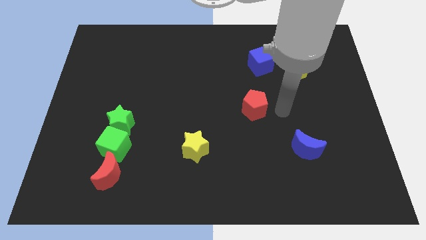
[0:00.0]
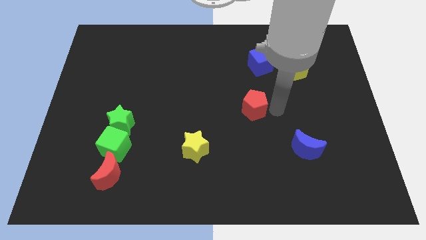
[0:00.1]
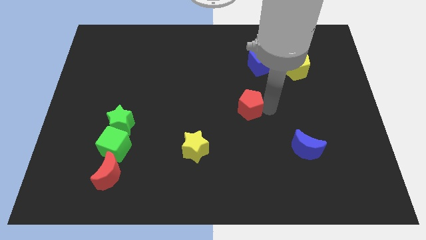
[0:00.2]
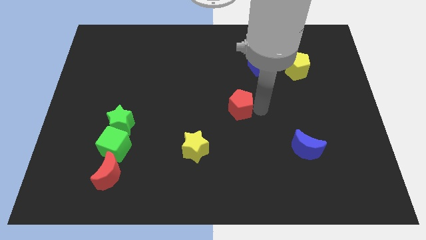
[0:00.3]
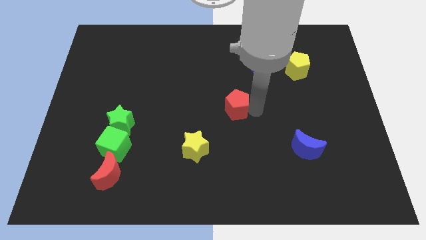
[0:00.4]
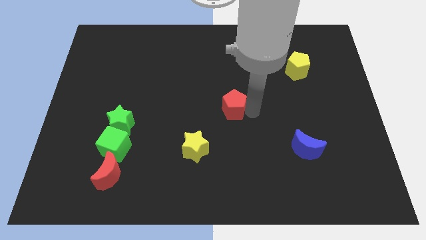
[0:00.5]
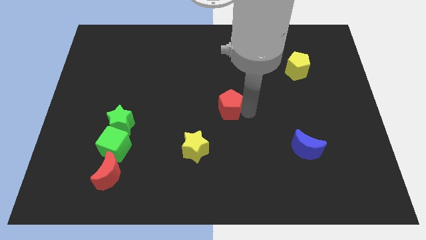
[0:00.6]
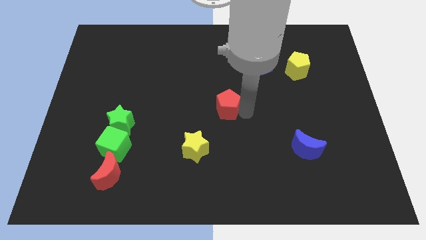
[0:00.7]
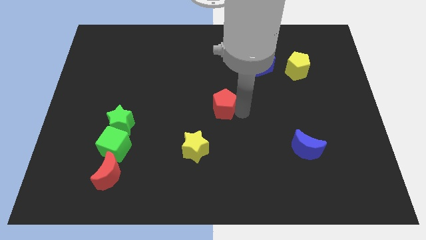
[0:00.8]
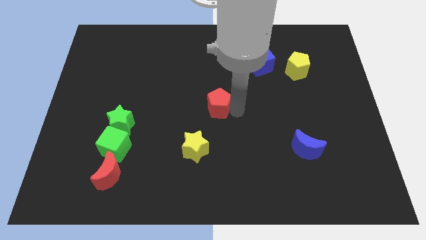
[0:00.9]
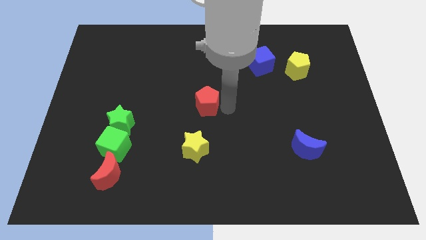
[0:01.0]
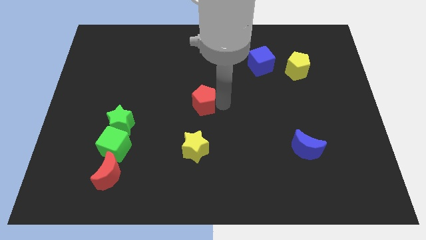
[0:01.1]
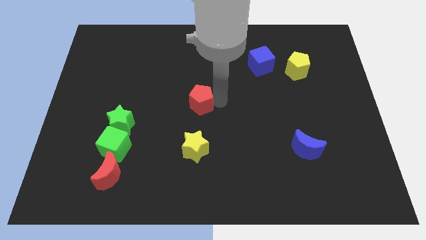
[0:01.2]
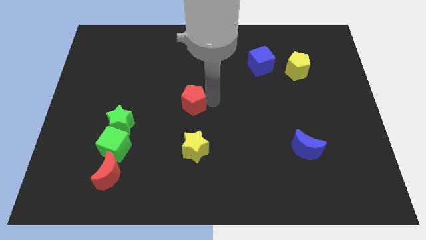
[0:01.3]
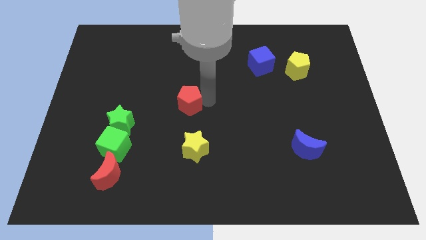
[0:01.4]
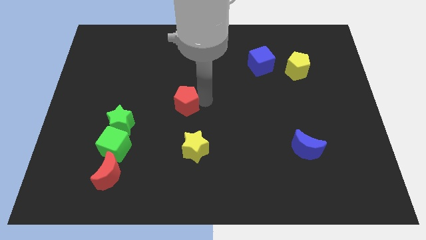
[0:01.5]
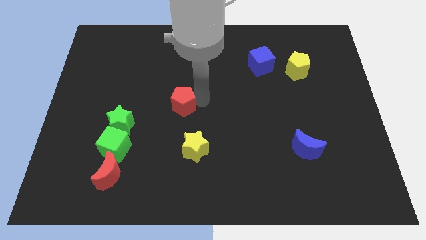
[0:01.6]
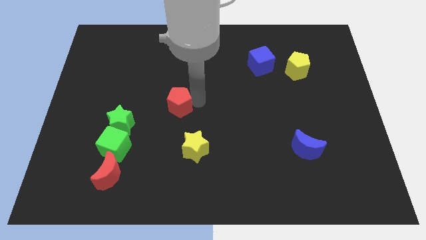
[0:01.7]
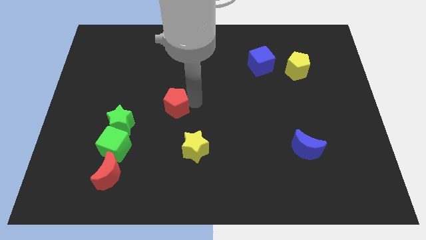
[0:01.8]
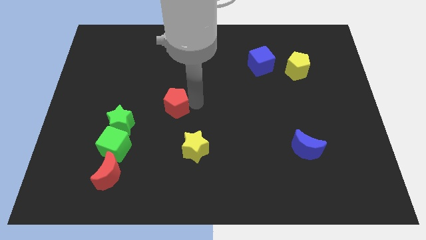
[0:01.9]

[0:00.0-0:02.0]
move the red pentagon to the top left of the yellow star

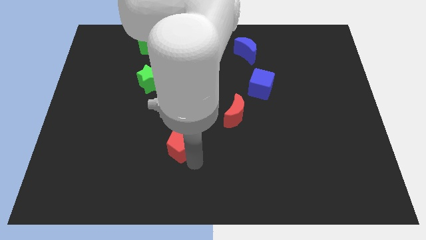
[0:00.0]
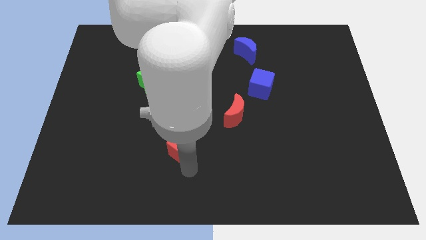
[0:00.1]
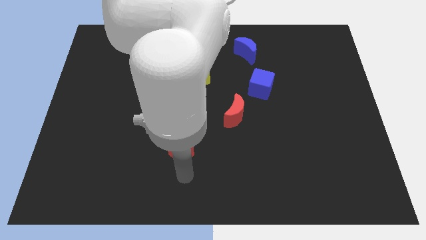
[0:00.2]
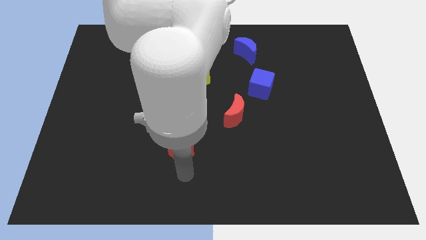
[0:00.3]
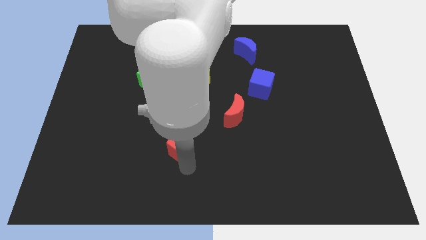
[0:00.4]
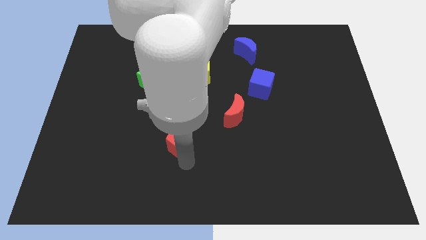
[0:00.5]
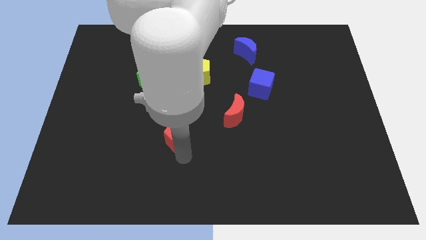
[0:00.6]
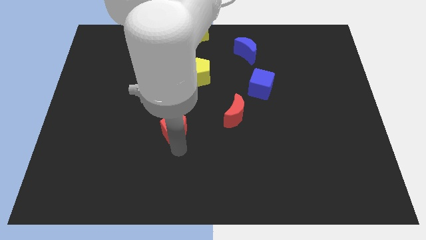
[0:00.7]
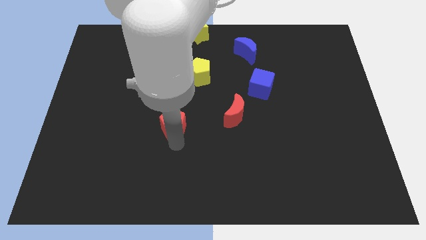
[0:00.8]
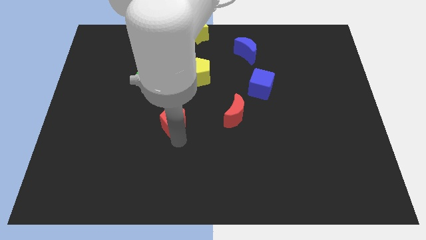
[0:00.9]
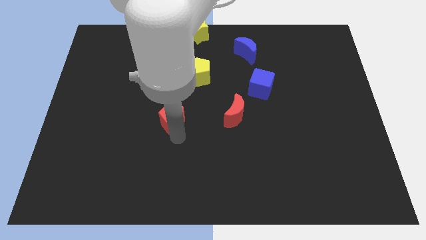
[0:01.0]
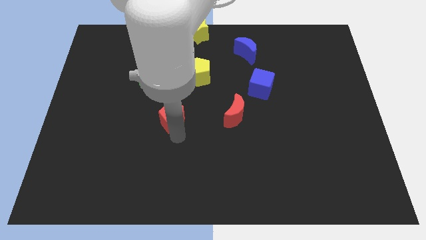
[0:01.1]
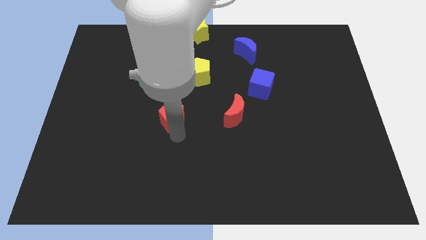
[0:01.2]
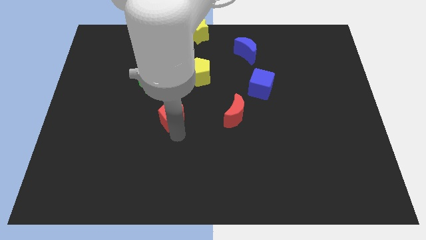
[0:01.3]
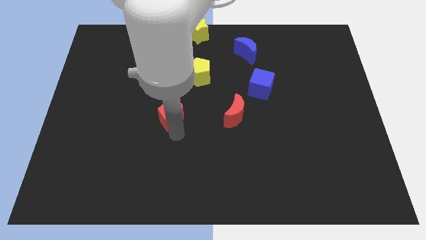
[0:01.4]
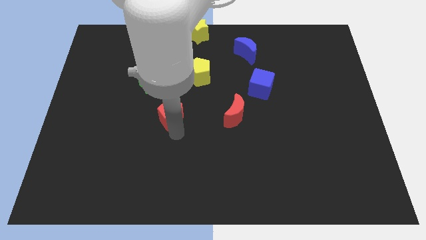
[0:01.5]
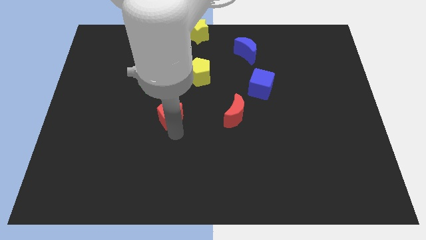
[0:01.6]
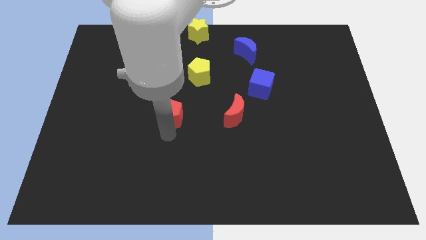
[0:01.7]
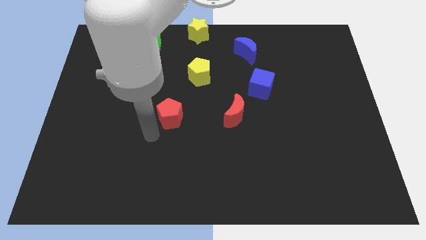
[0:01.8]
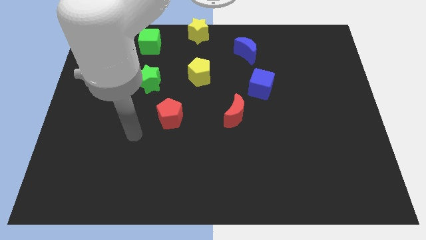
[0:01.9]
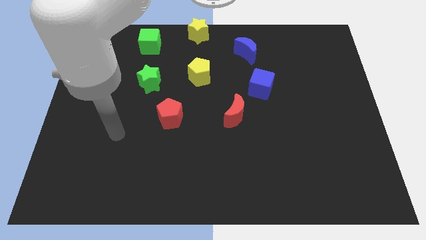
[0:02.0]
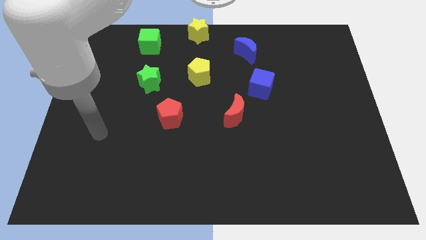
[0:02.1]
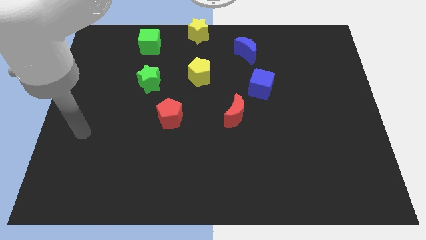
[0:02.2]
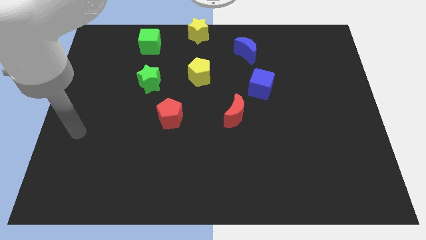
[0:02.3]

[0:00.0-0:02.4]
place the red pentagon diagonal to the green star

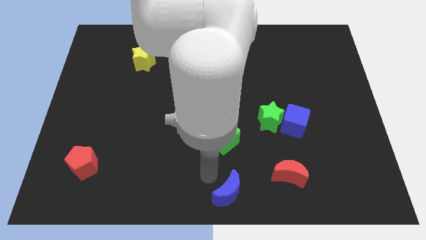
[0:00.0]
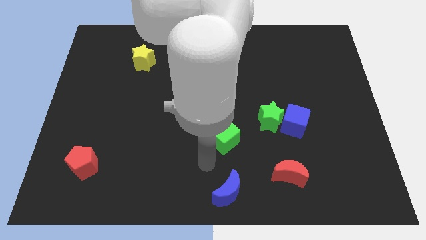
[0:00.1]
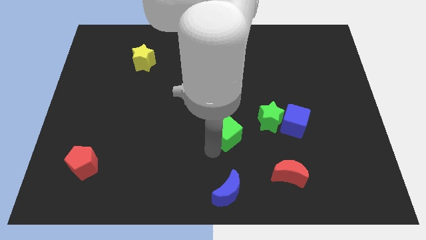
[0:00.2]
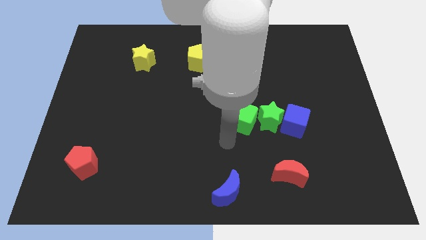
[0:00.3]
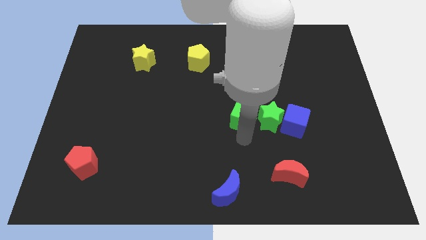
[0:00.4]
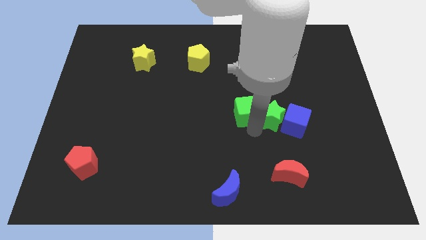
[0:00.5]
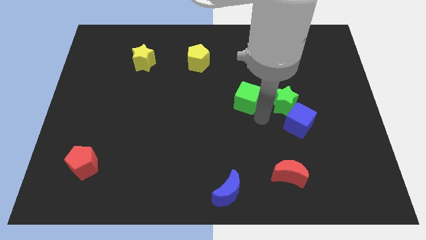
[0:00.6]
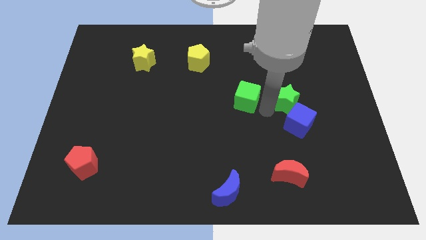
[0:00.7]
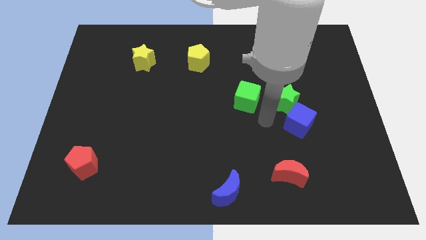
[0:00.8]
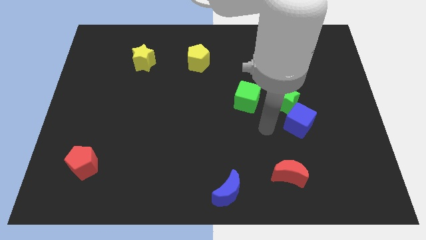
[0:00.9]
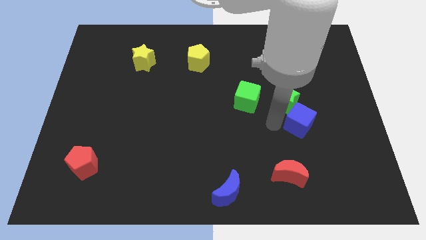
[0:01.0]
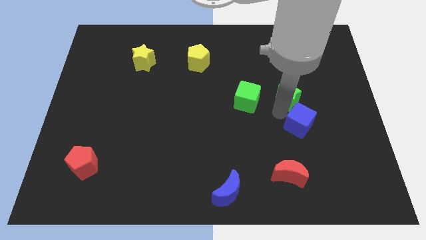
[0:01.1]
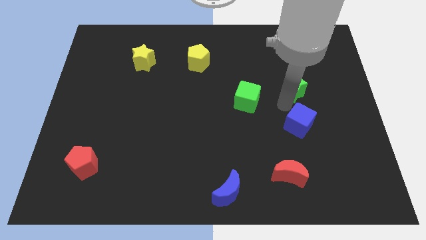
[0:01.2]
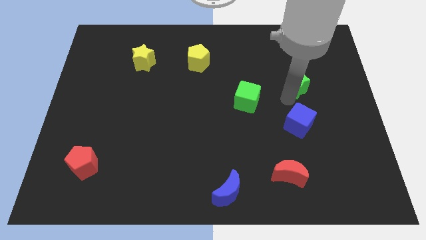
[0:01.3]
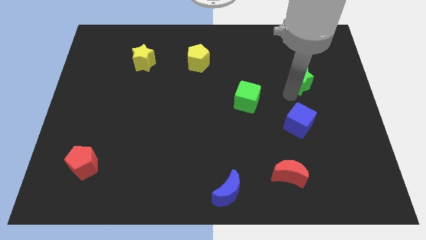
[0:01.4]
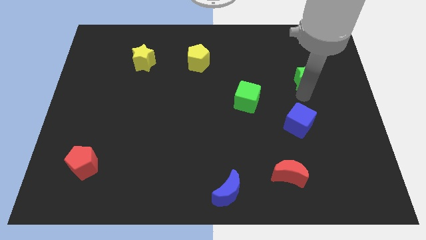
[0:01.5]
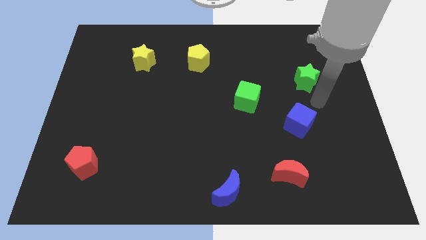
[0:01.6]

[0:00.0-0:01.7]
place the green star above the blue cube

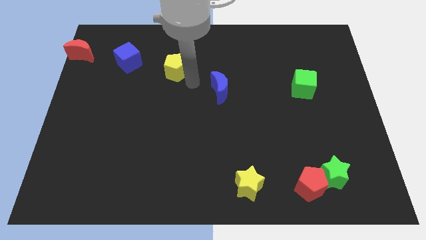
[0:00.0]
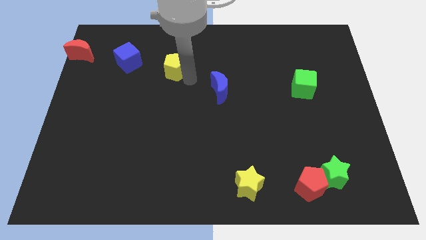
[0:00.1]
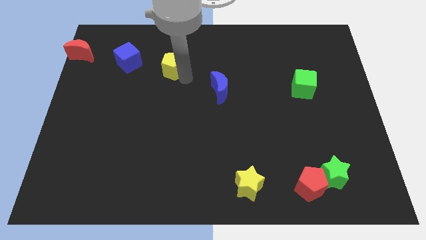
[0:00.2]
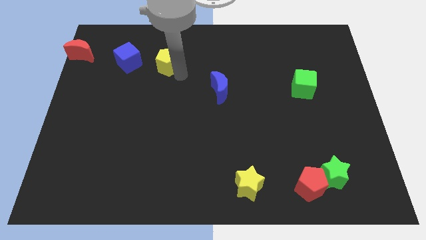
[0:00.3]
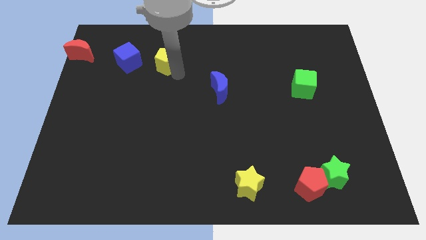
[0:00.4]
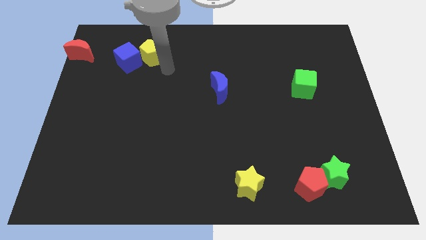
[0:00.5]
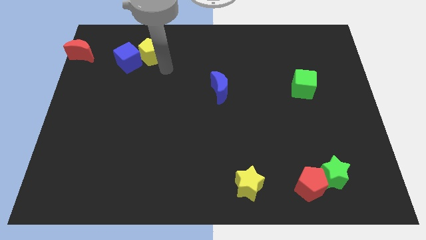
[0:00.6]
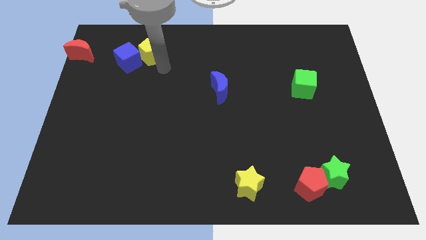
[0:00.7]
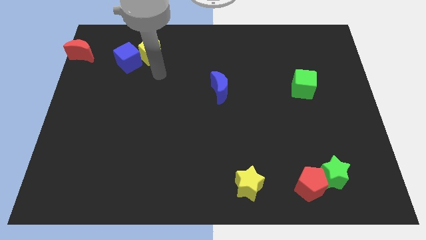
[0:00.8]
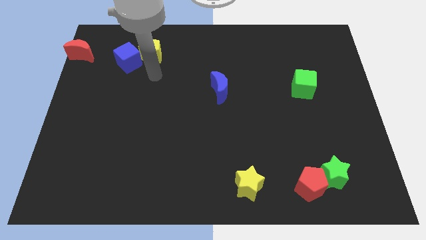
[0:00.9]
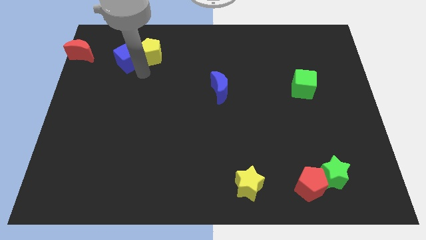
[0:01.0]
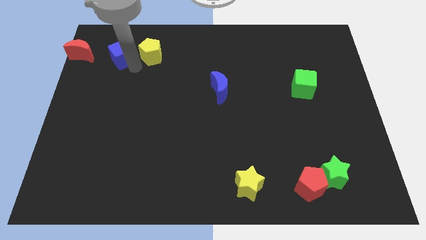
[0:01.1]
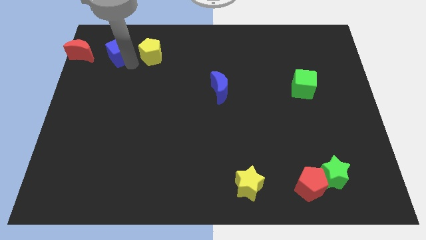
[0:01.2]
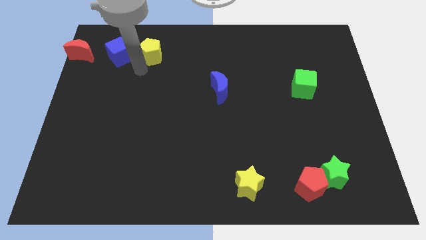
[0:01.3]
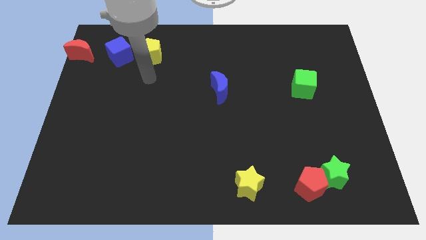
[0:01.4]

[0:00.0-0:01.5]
put the yellow pentagon on the right side of the blue cube

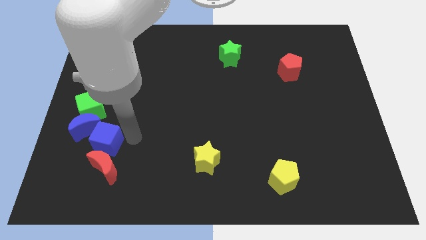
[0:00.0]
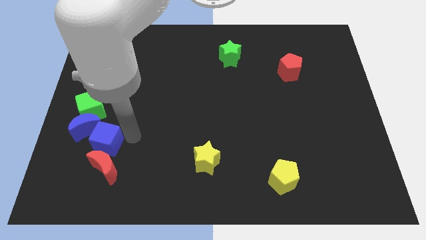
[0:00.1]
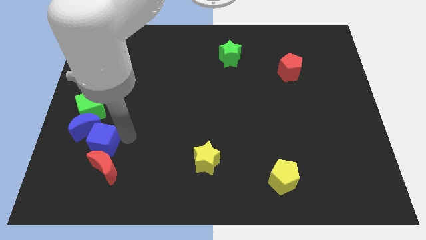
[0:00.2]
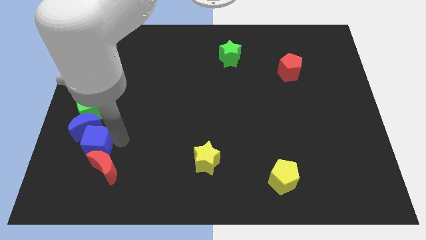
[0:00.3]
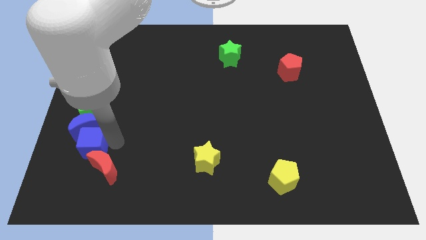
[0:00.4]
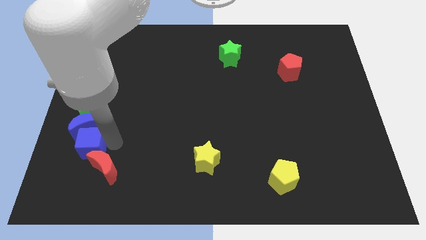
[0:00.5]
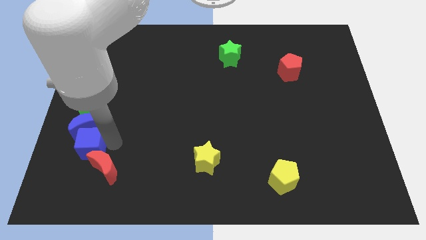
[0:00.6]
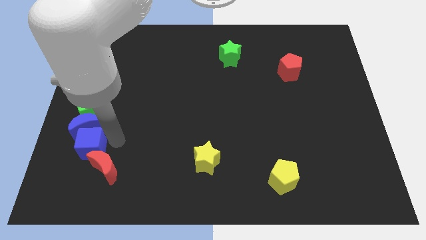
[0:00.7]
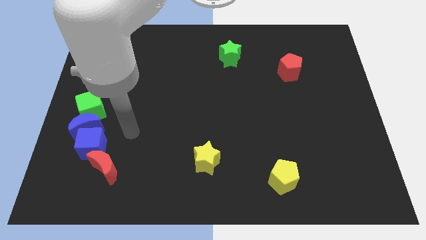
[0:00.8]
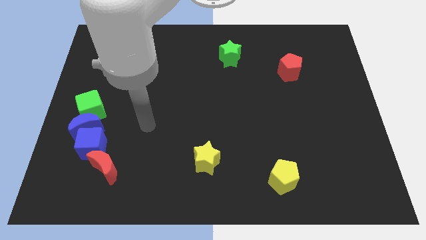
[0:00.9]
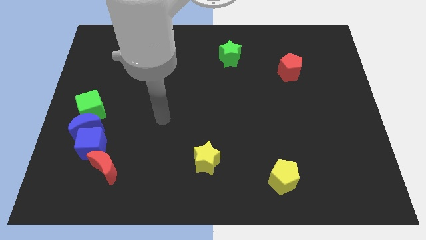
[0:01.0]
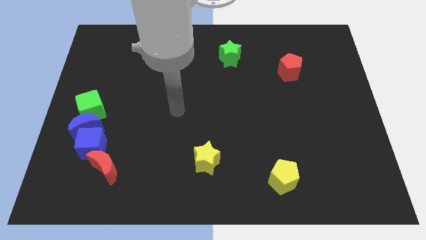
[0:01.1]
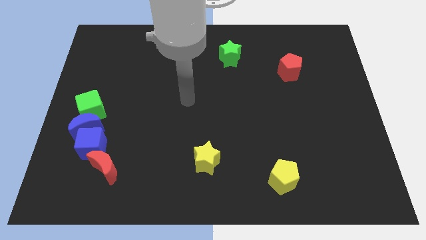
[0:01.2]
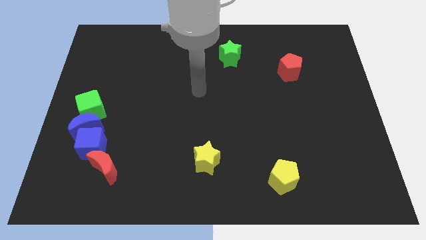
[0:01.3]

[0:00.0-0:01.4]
move the blue cube in between the blue and red crescents

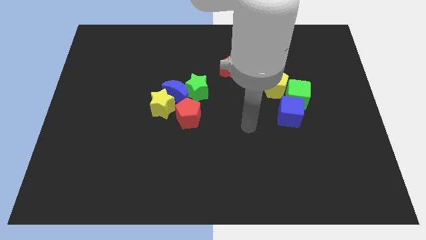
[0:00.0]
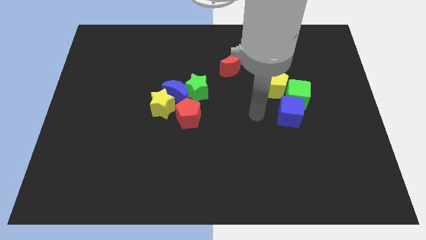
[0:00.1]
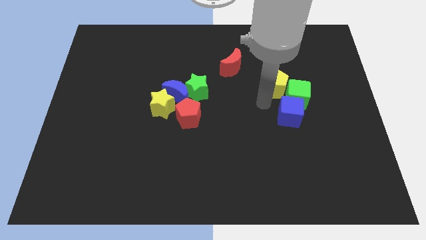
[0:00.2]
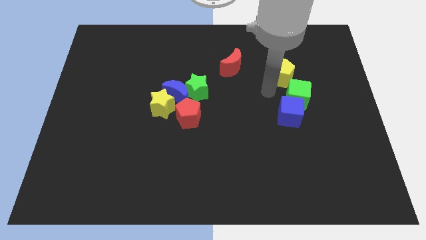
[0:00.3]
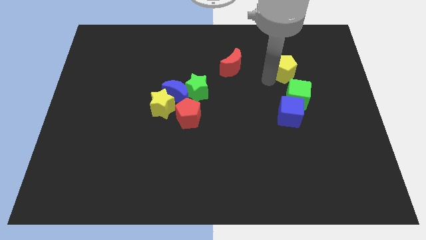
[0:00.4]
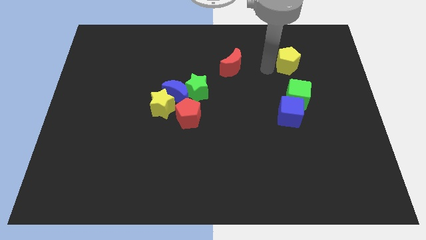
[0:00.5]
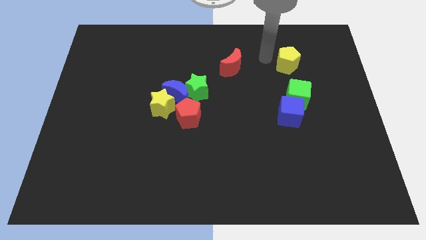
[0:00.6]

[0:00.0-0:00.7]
point your arm close to yellow pentagon
